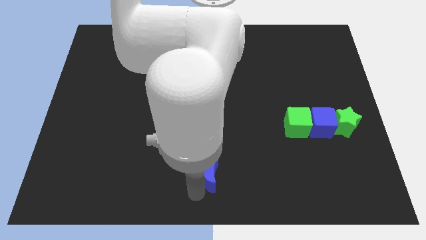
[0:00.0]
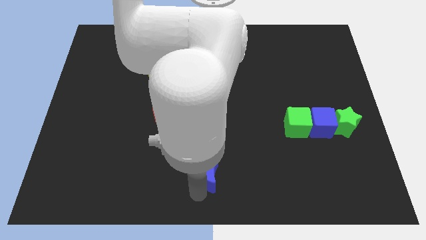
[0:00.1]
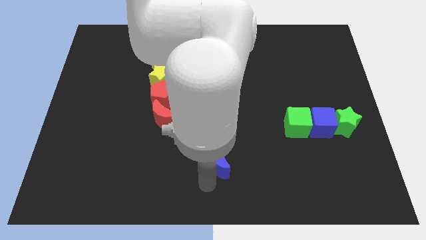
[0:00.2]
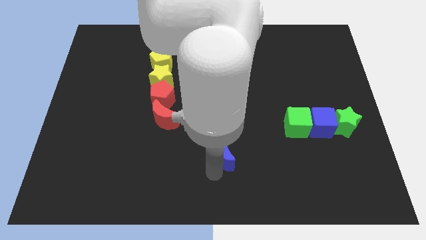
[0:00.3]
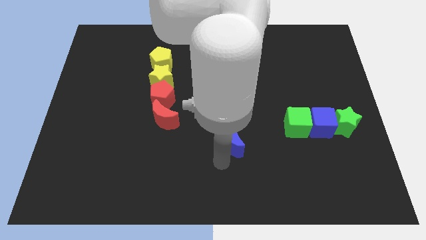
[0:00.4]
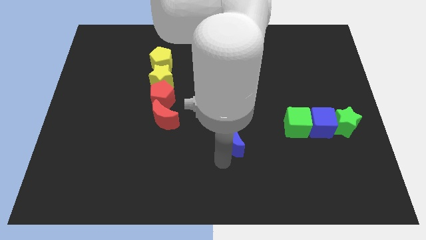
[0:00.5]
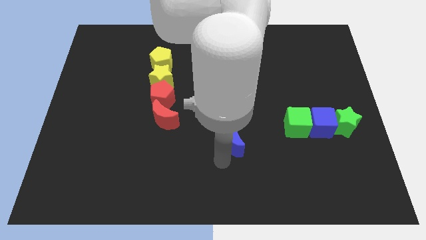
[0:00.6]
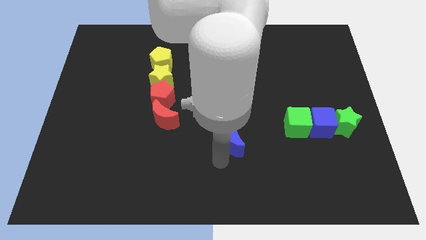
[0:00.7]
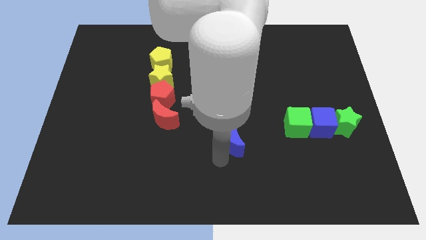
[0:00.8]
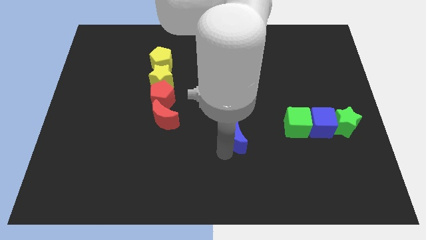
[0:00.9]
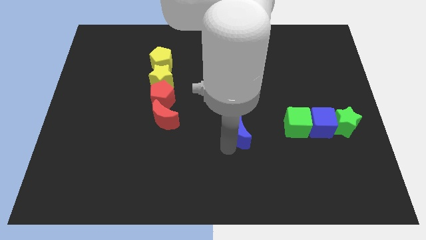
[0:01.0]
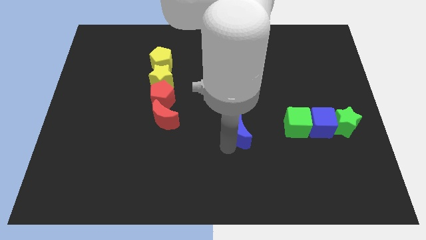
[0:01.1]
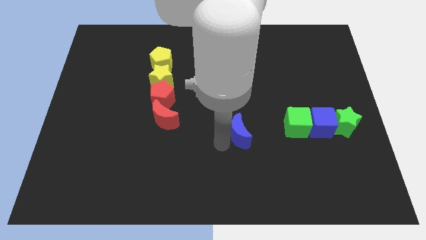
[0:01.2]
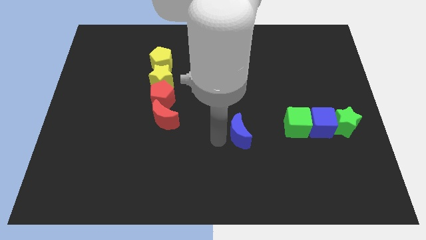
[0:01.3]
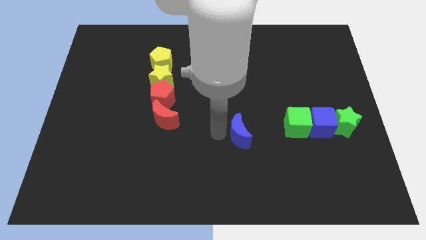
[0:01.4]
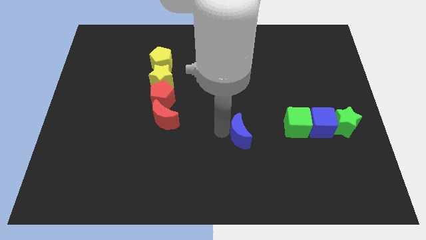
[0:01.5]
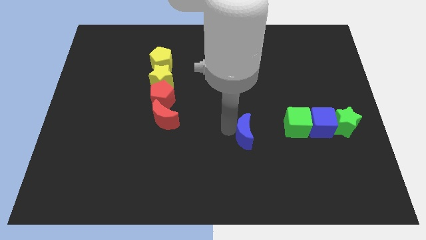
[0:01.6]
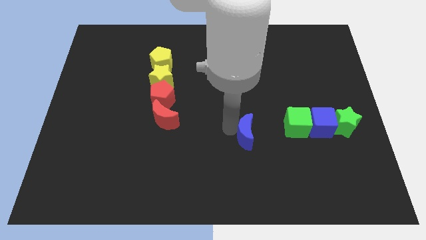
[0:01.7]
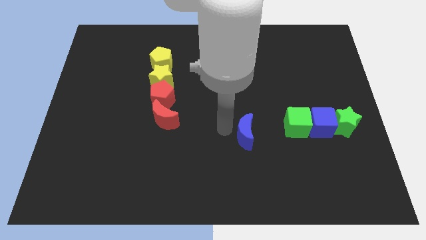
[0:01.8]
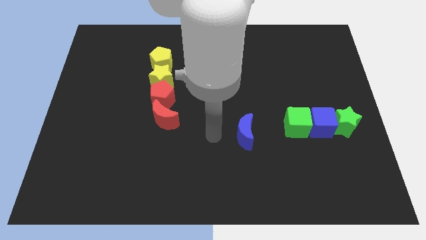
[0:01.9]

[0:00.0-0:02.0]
move the blue semicircle towards the green cube

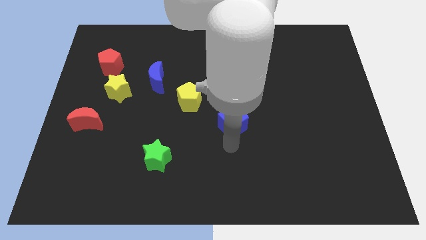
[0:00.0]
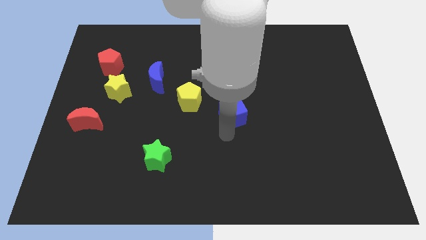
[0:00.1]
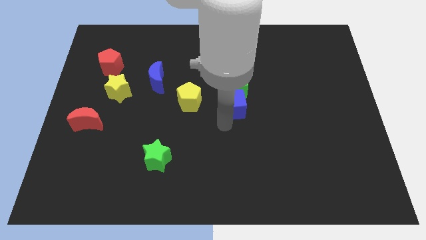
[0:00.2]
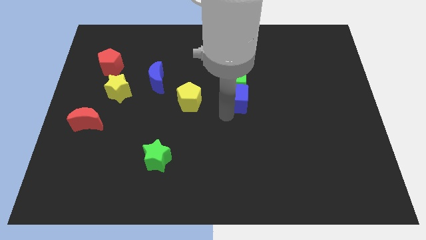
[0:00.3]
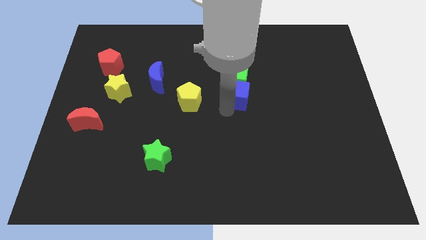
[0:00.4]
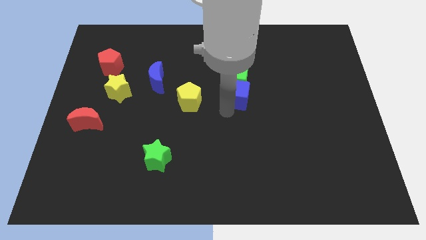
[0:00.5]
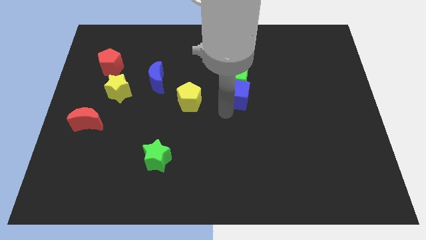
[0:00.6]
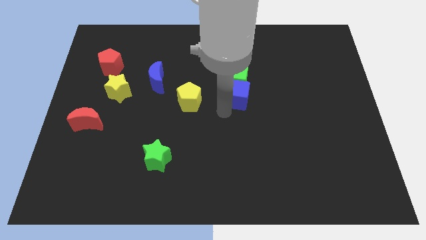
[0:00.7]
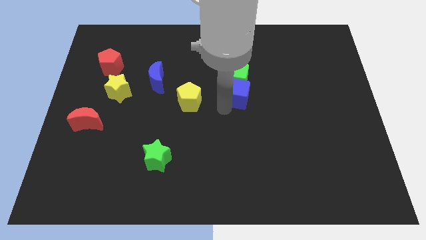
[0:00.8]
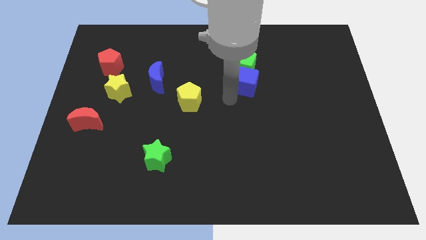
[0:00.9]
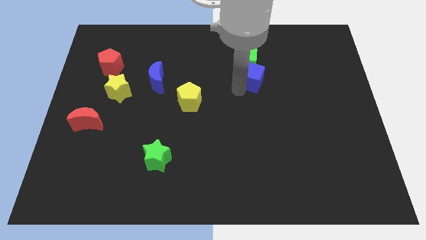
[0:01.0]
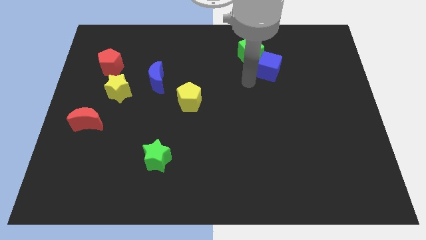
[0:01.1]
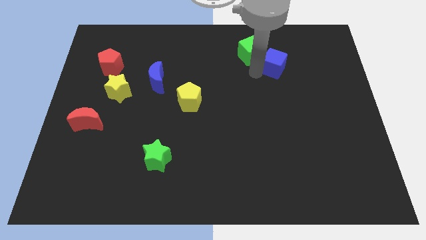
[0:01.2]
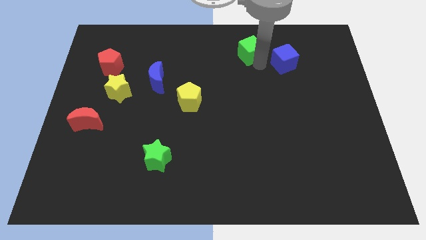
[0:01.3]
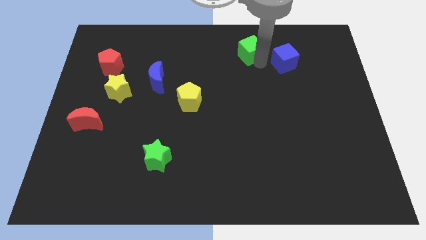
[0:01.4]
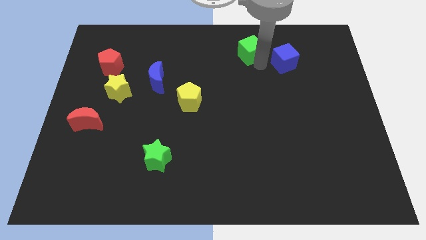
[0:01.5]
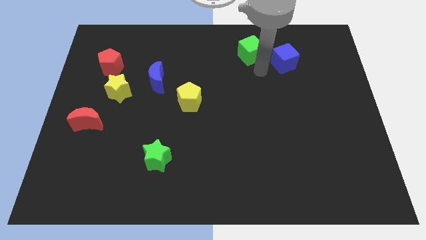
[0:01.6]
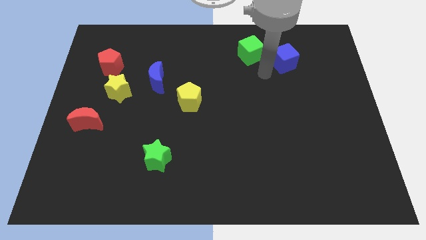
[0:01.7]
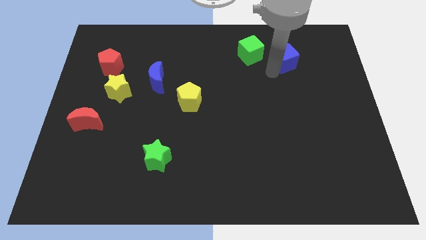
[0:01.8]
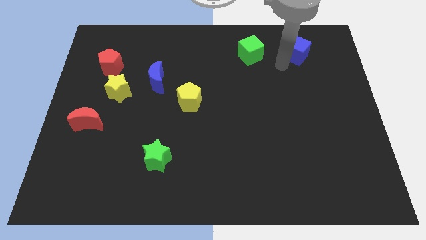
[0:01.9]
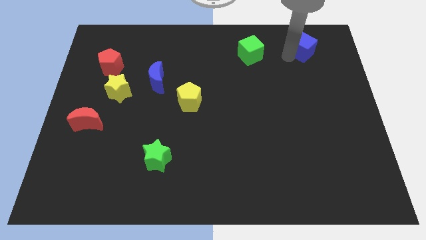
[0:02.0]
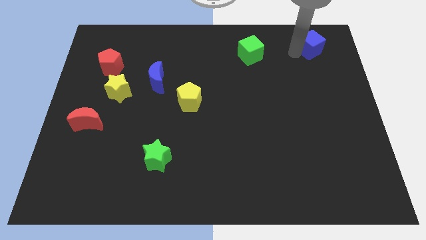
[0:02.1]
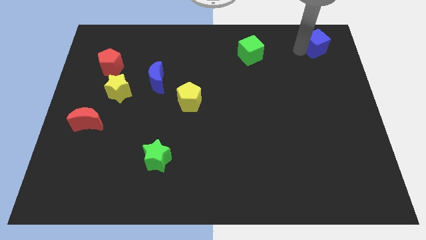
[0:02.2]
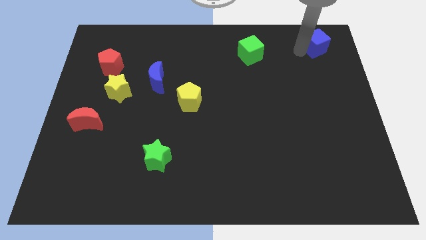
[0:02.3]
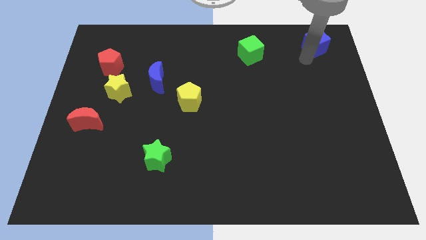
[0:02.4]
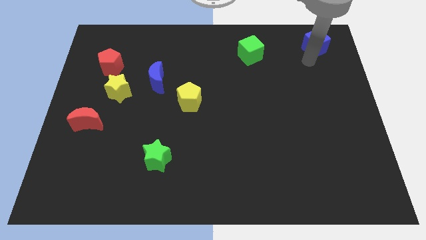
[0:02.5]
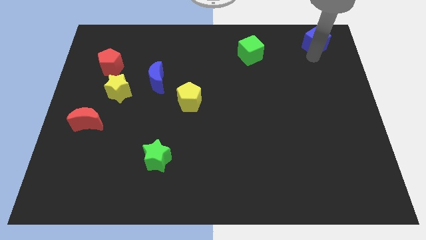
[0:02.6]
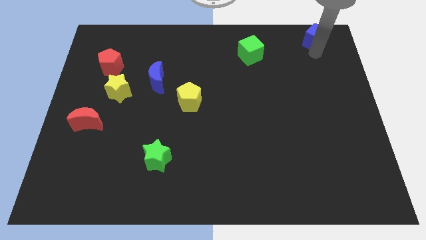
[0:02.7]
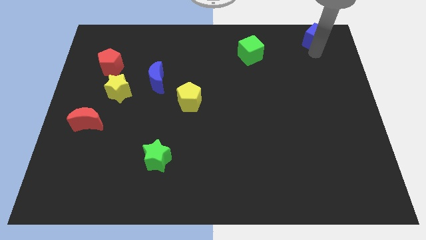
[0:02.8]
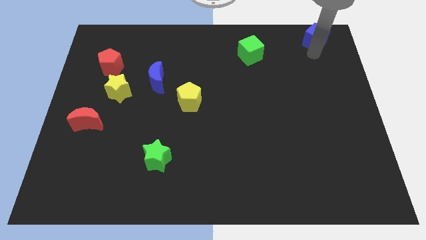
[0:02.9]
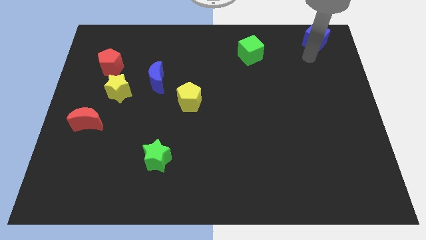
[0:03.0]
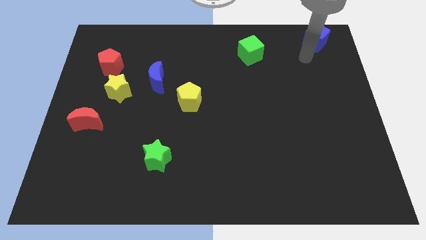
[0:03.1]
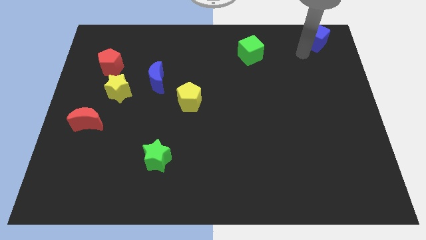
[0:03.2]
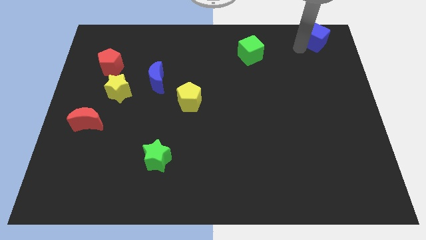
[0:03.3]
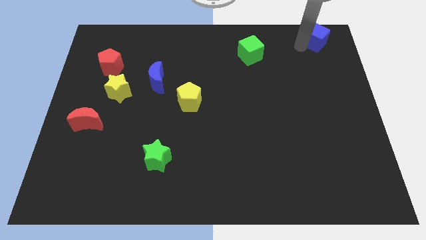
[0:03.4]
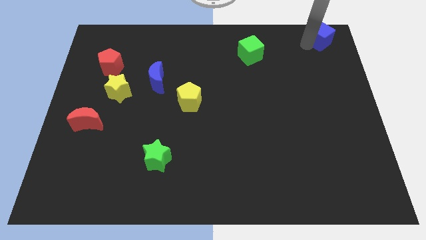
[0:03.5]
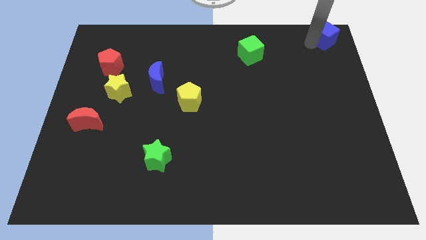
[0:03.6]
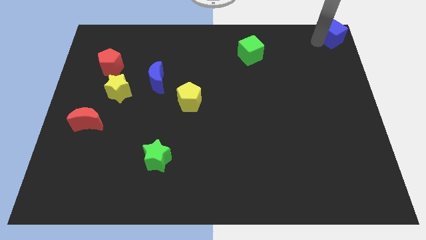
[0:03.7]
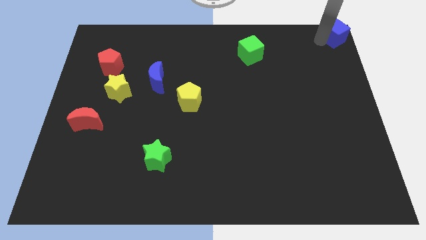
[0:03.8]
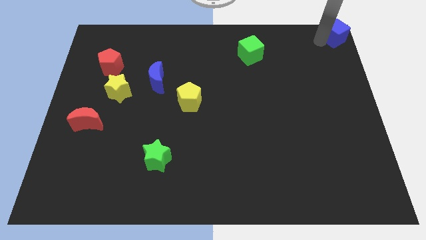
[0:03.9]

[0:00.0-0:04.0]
push the blue cube to the top right corner of board

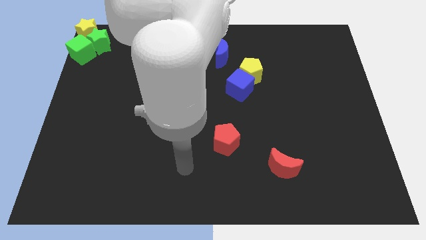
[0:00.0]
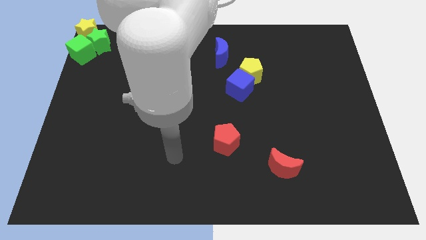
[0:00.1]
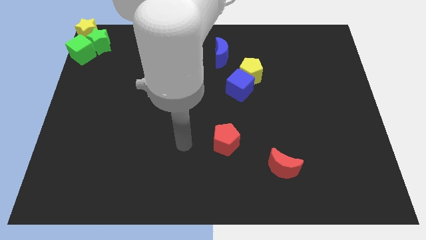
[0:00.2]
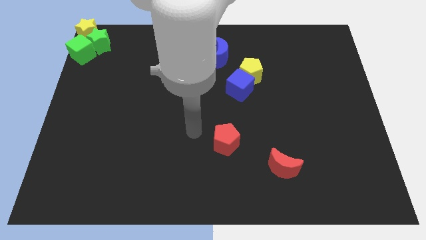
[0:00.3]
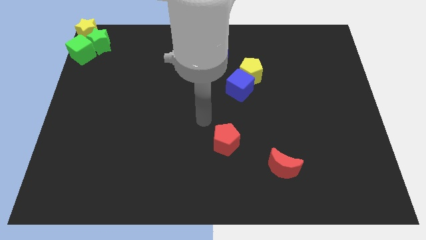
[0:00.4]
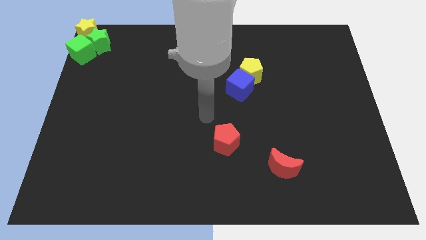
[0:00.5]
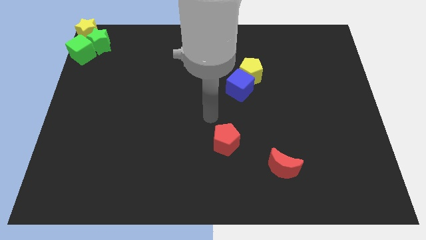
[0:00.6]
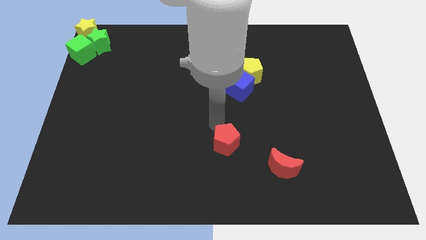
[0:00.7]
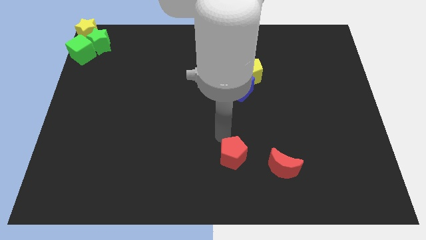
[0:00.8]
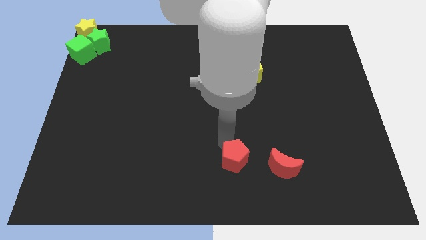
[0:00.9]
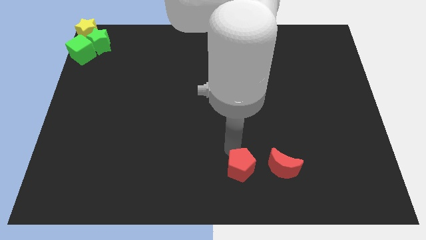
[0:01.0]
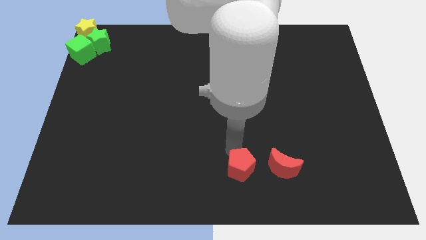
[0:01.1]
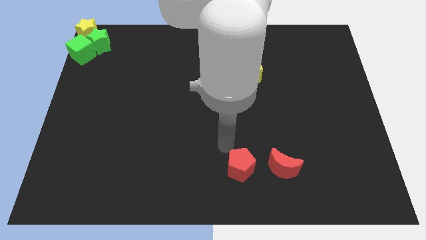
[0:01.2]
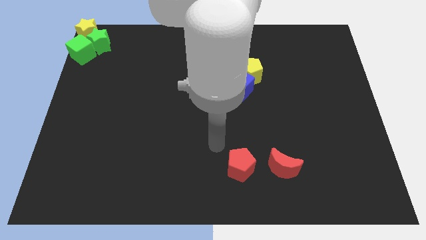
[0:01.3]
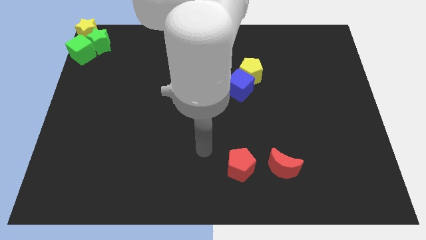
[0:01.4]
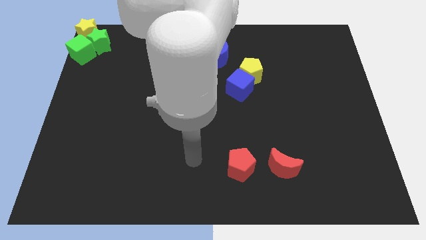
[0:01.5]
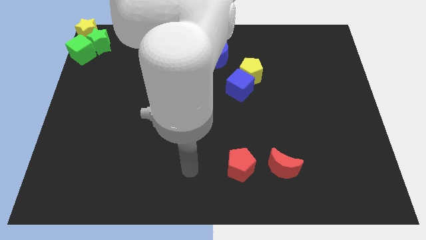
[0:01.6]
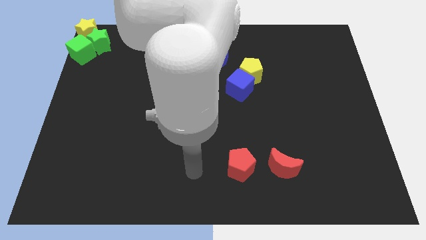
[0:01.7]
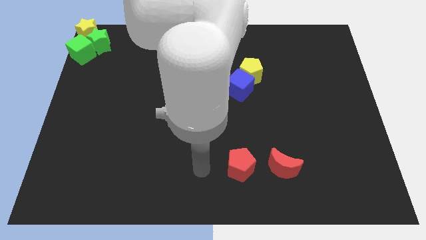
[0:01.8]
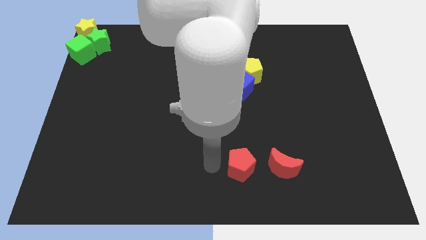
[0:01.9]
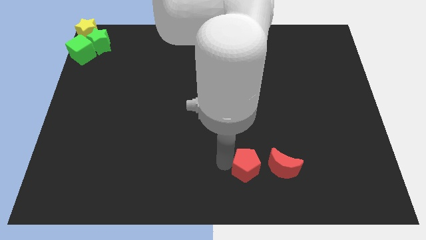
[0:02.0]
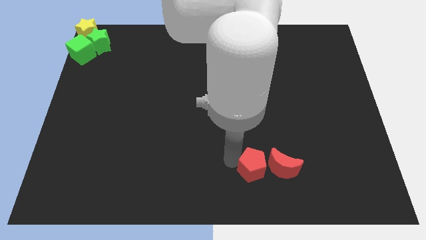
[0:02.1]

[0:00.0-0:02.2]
place the red pentagon at the right side of the red crescent

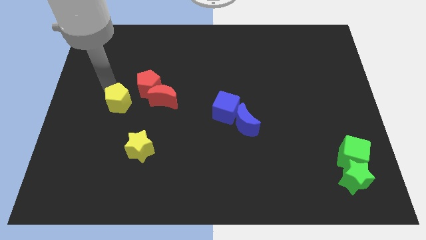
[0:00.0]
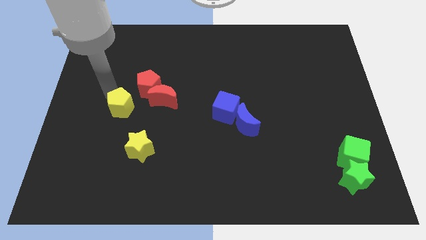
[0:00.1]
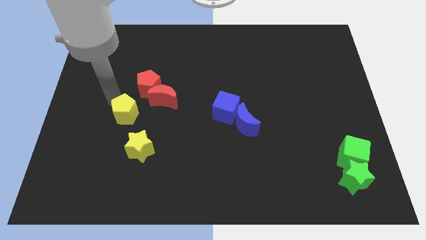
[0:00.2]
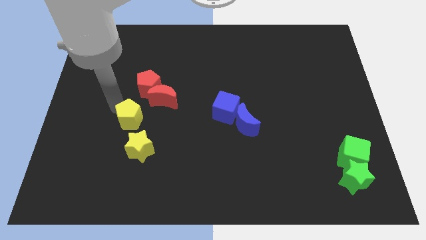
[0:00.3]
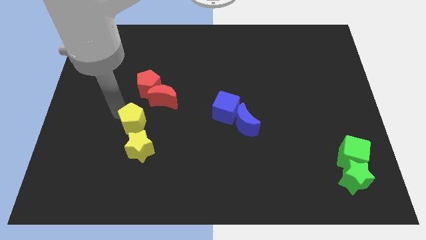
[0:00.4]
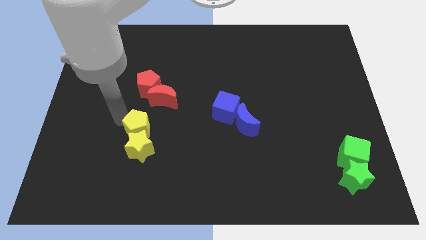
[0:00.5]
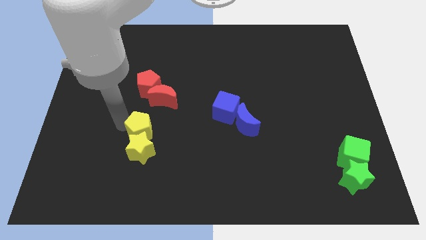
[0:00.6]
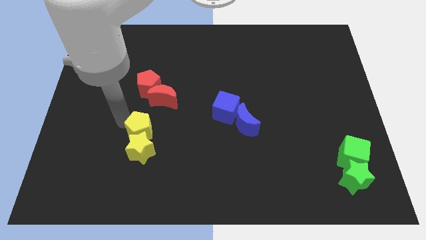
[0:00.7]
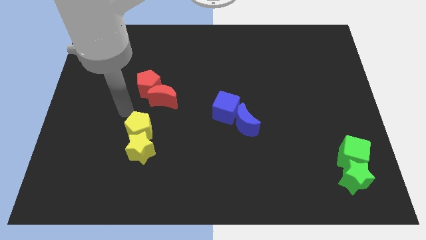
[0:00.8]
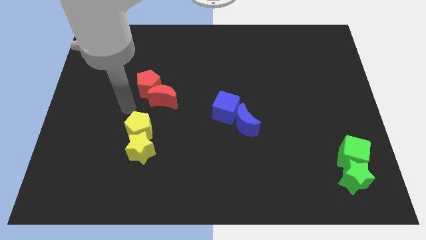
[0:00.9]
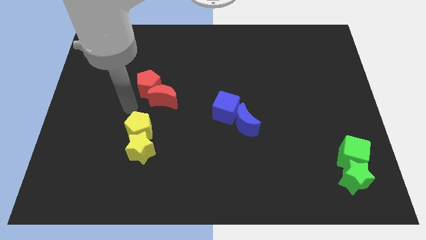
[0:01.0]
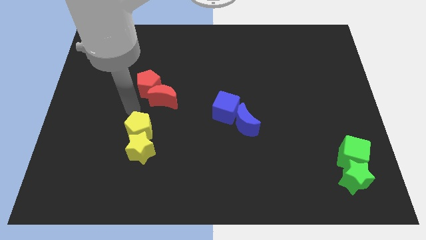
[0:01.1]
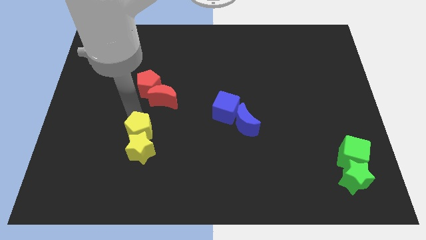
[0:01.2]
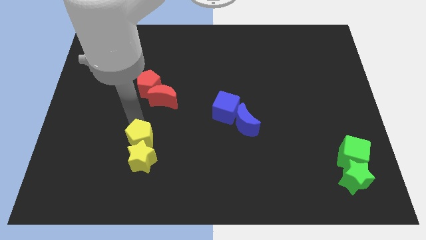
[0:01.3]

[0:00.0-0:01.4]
place the yellow pentagon above the yellow star
